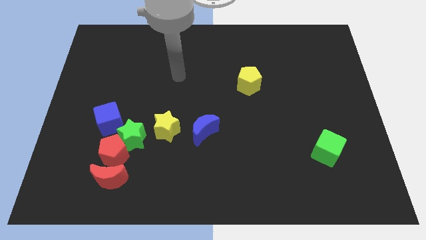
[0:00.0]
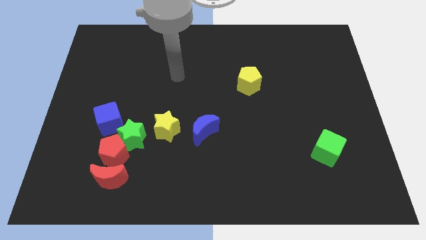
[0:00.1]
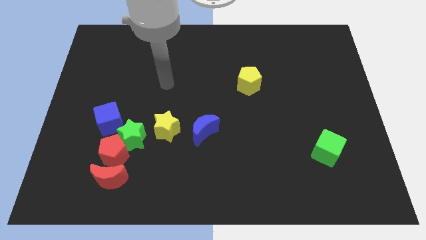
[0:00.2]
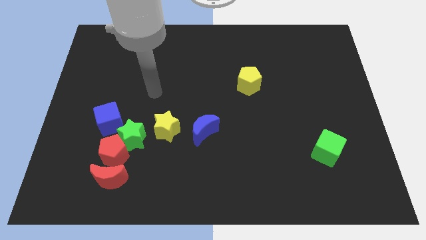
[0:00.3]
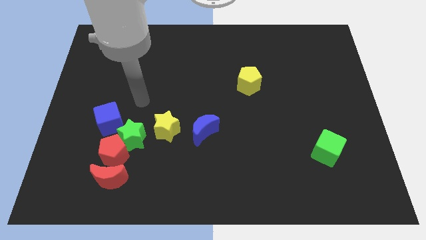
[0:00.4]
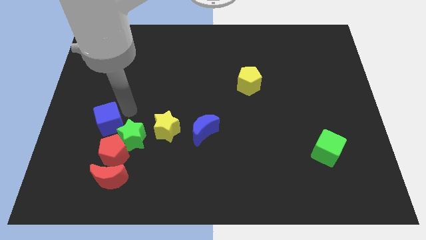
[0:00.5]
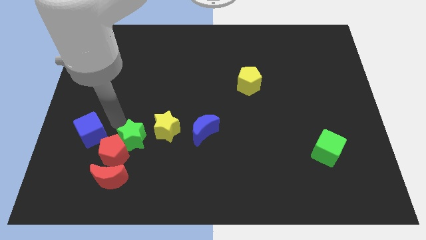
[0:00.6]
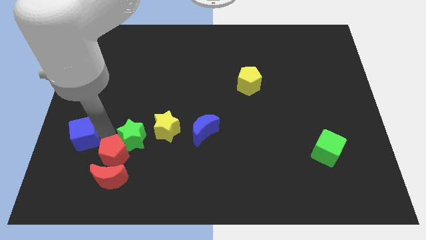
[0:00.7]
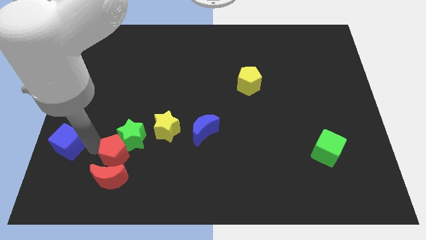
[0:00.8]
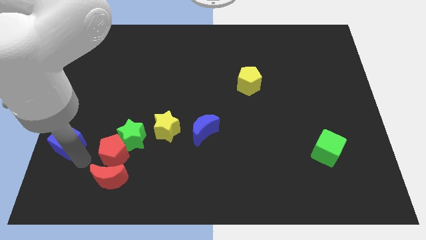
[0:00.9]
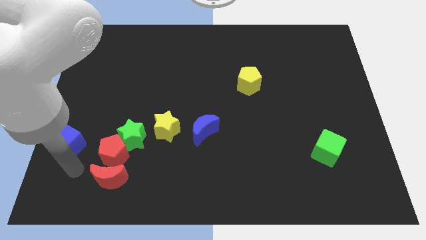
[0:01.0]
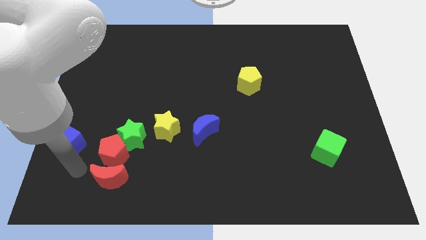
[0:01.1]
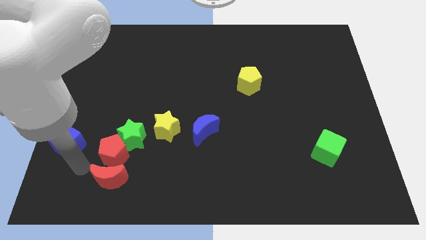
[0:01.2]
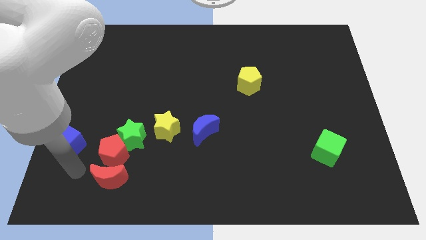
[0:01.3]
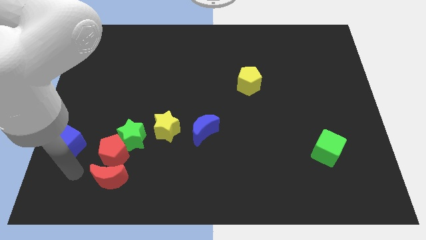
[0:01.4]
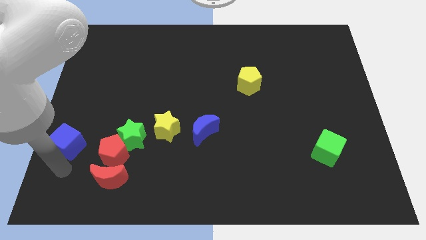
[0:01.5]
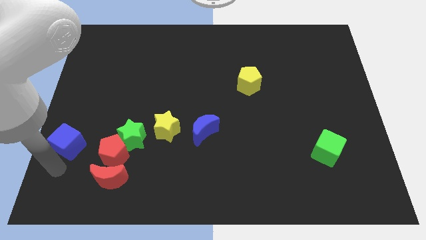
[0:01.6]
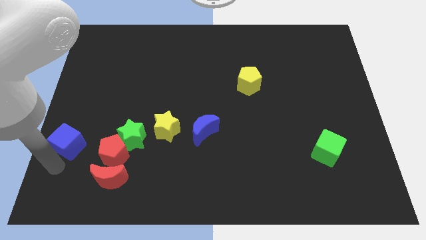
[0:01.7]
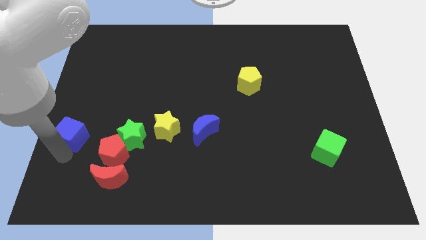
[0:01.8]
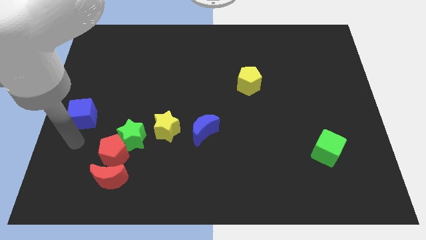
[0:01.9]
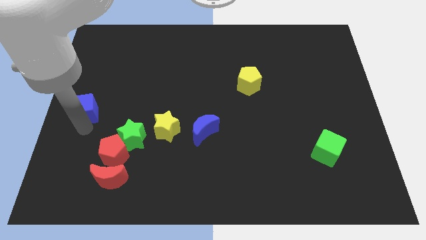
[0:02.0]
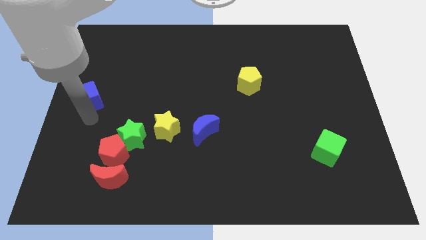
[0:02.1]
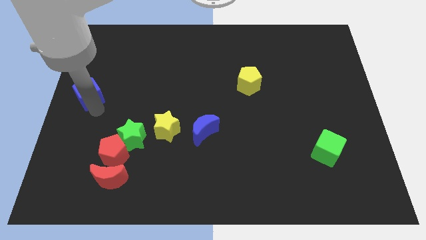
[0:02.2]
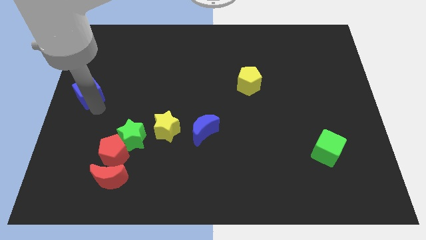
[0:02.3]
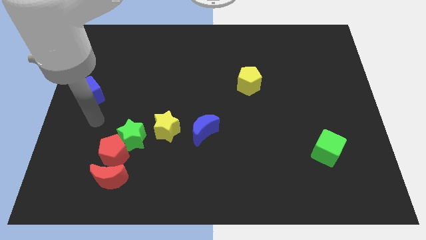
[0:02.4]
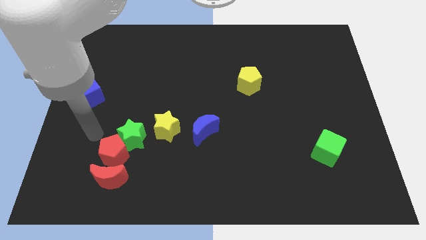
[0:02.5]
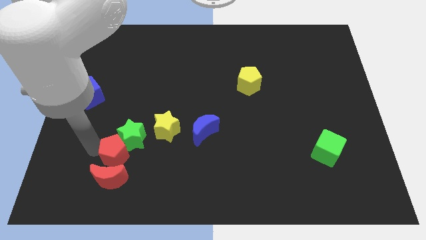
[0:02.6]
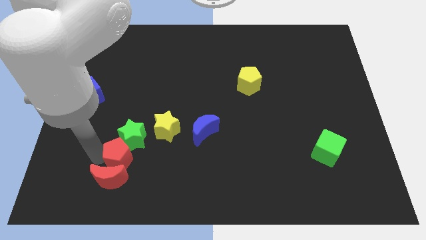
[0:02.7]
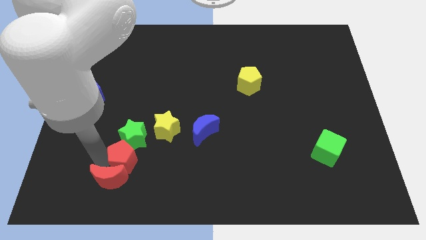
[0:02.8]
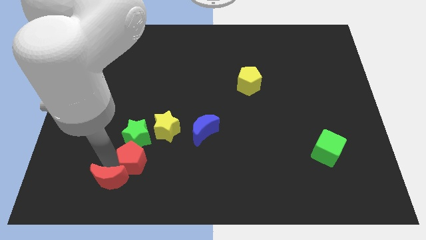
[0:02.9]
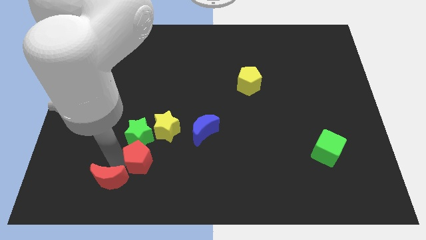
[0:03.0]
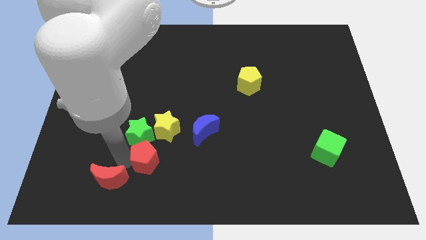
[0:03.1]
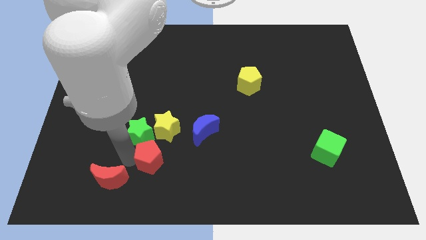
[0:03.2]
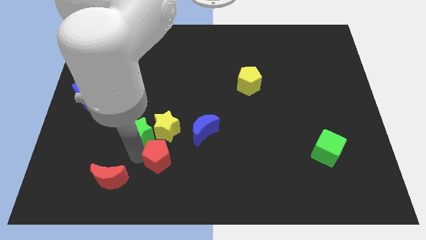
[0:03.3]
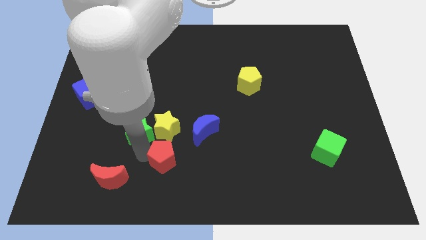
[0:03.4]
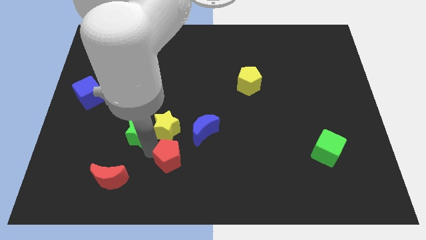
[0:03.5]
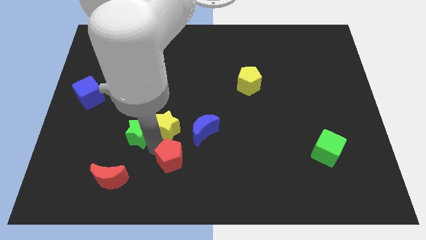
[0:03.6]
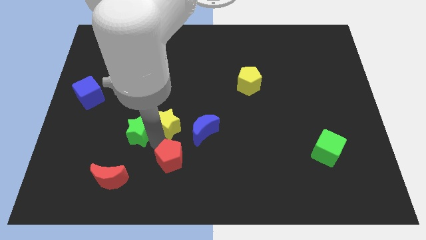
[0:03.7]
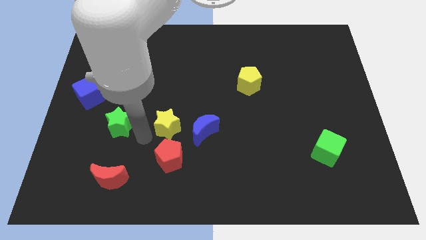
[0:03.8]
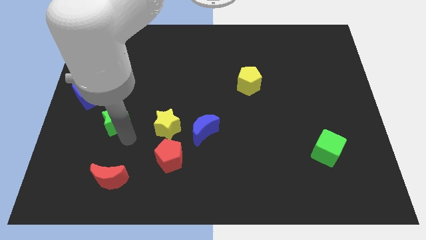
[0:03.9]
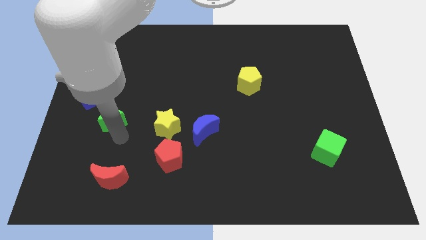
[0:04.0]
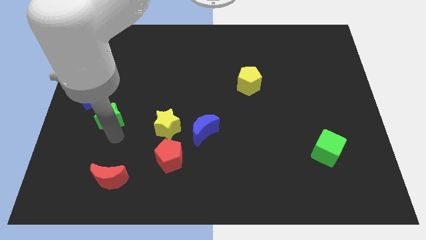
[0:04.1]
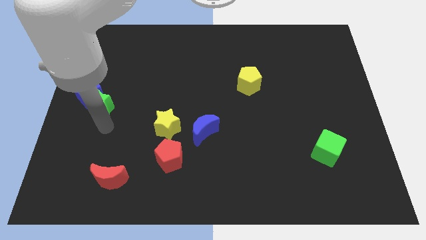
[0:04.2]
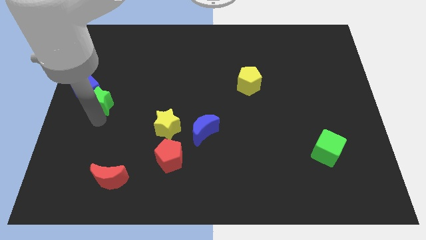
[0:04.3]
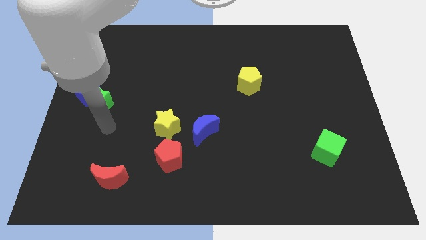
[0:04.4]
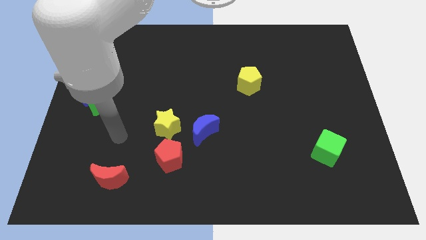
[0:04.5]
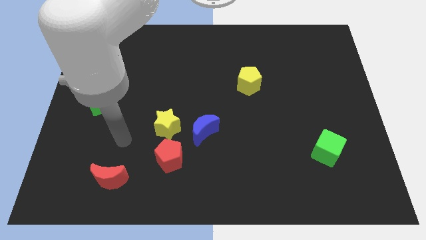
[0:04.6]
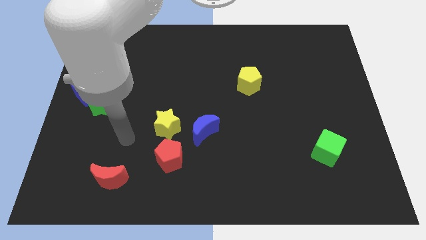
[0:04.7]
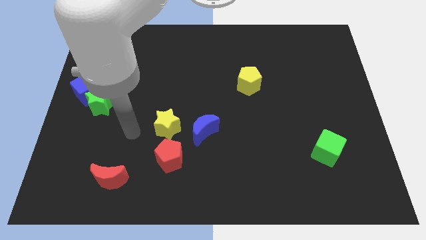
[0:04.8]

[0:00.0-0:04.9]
push the blue cube towards the center left of the board

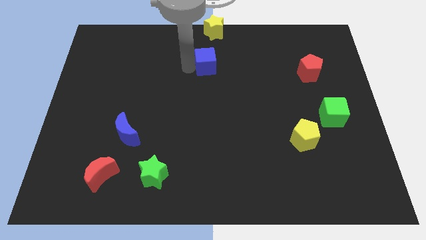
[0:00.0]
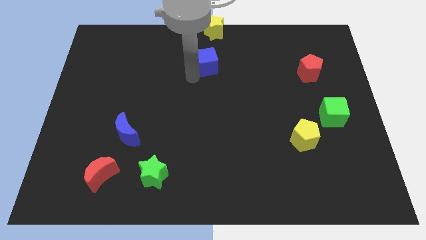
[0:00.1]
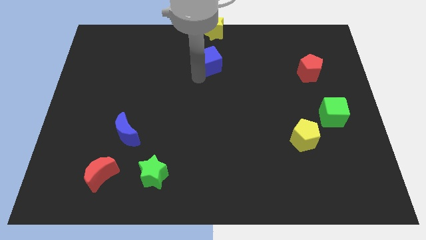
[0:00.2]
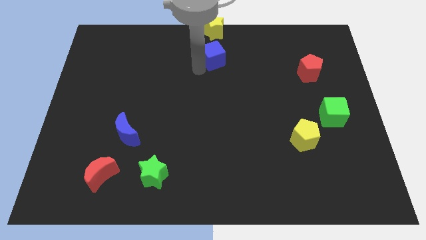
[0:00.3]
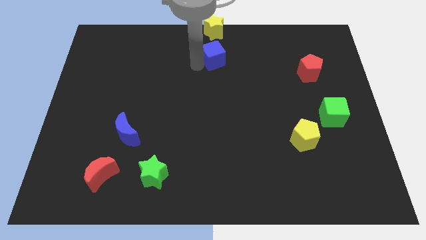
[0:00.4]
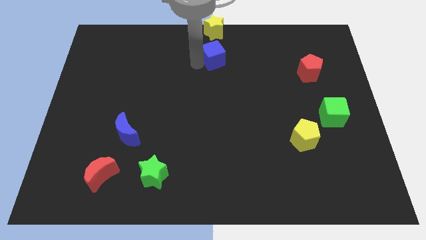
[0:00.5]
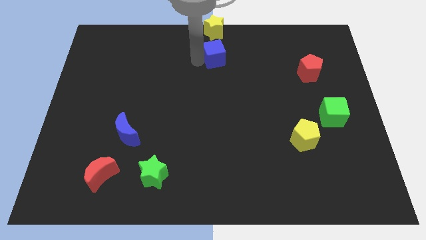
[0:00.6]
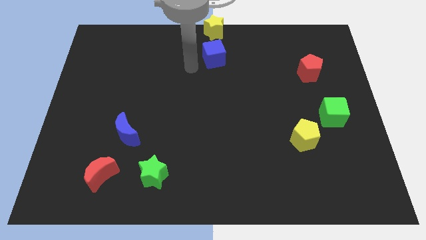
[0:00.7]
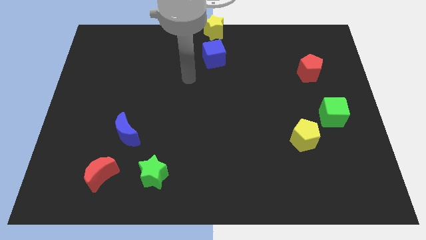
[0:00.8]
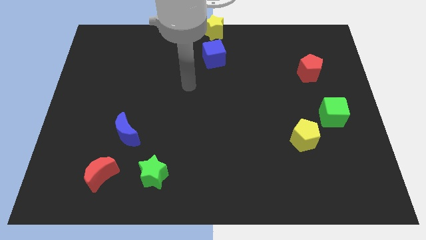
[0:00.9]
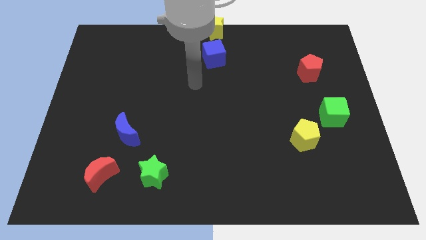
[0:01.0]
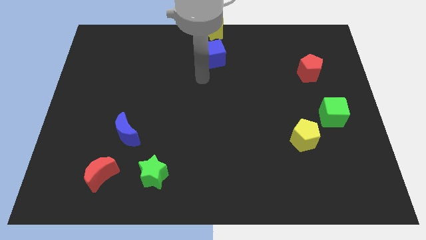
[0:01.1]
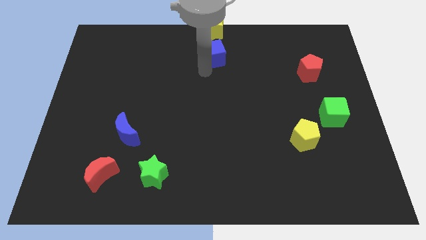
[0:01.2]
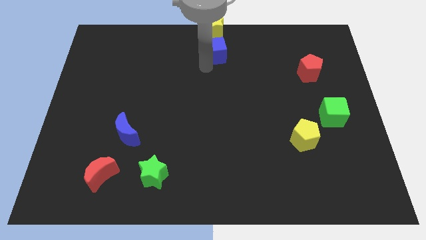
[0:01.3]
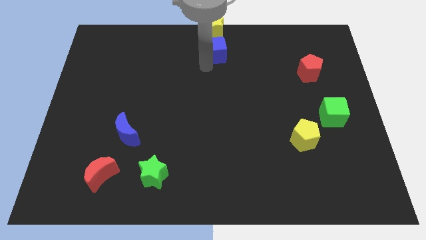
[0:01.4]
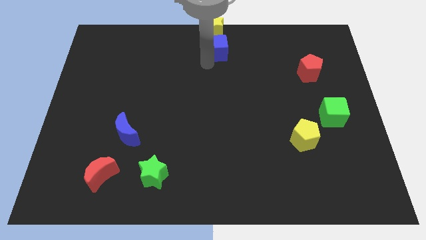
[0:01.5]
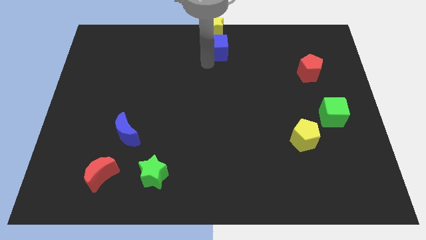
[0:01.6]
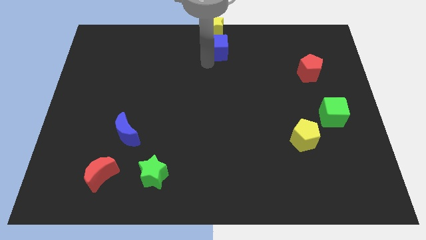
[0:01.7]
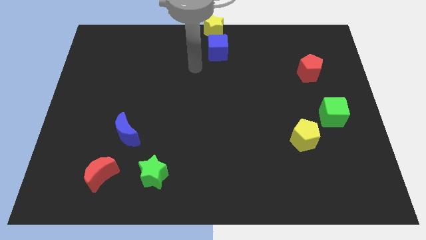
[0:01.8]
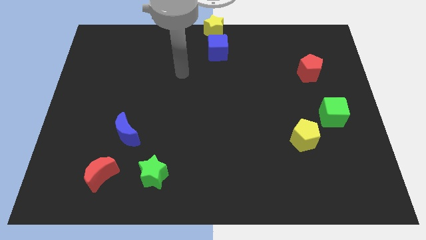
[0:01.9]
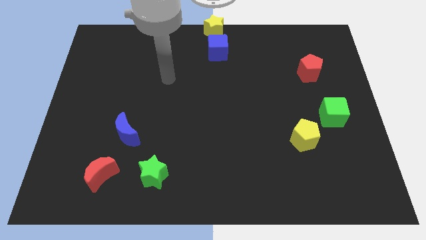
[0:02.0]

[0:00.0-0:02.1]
push the blue cube close to the yellow star

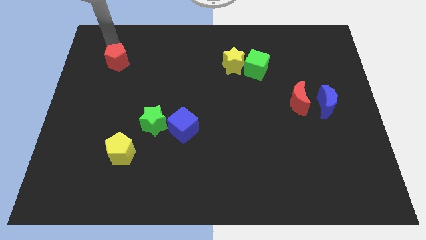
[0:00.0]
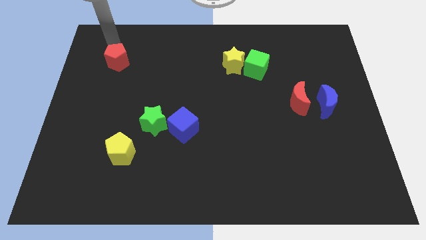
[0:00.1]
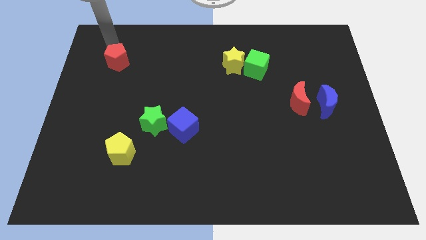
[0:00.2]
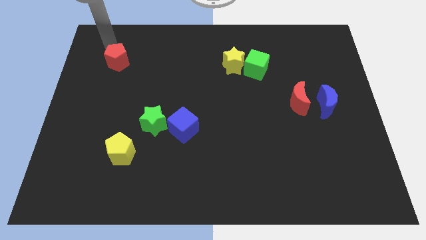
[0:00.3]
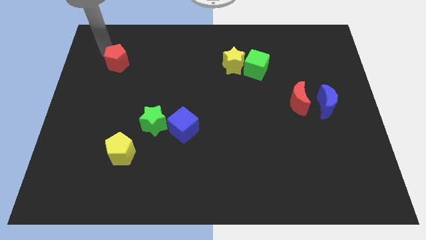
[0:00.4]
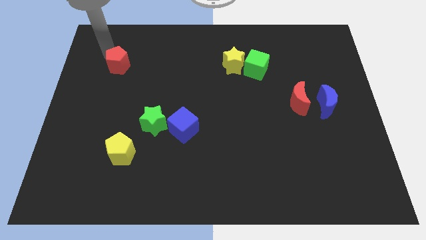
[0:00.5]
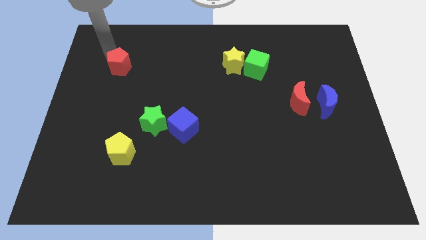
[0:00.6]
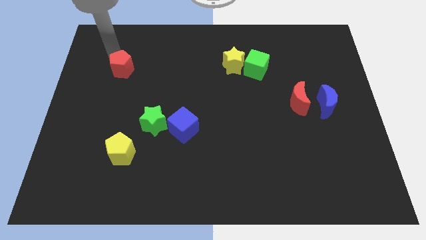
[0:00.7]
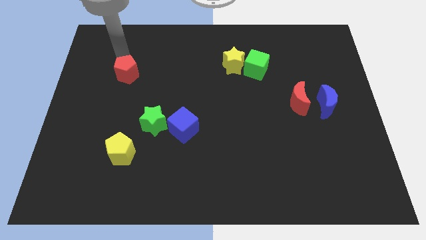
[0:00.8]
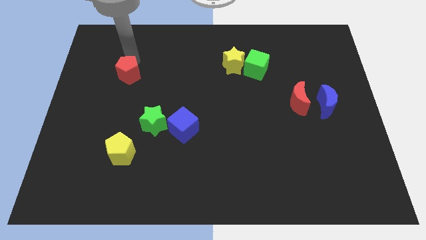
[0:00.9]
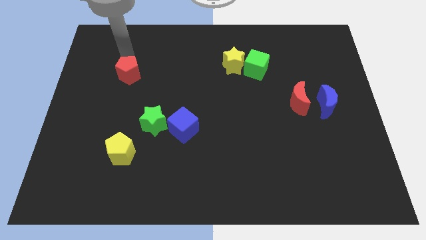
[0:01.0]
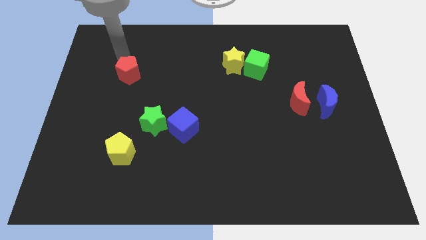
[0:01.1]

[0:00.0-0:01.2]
push red pentagon to the bottom of the board

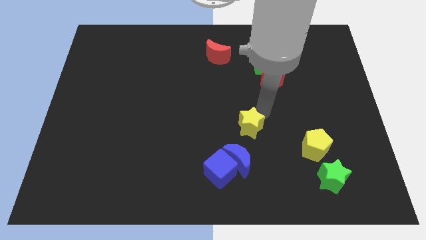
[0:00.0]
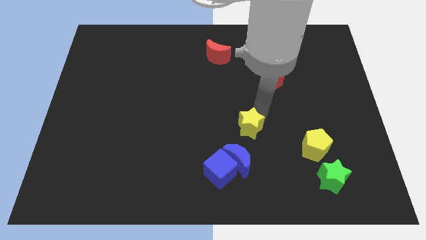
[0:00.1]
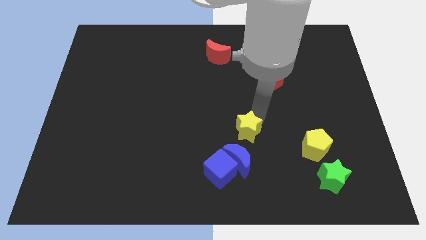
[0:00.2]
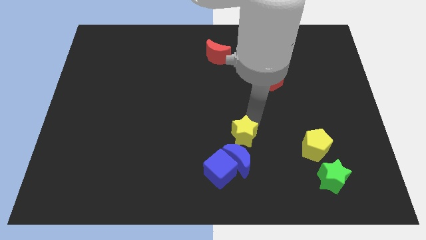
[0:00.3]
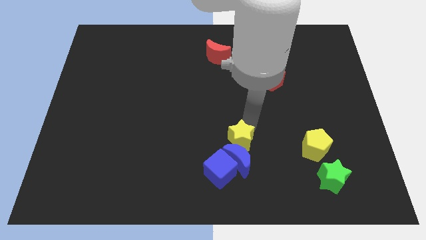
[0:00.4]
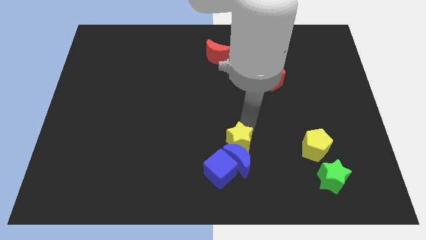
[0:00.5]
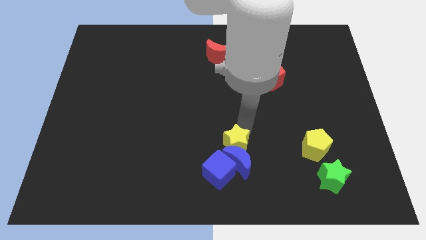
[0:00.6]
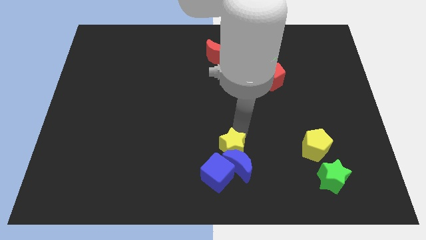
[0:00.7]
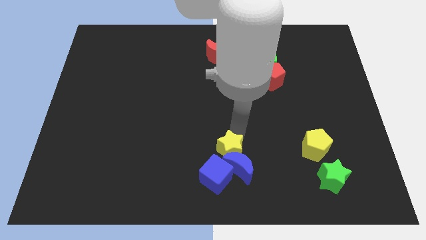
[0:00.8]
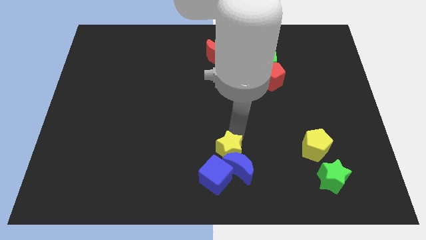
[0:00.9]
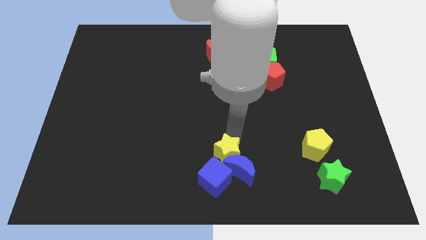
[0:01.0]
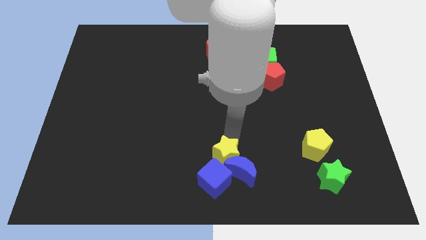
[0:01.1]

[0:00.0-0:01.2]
push the yellow star into the blue moon and blue cube
